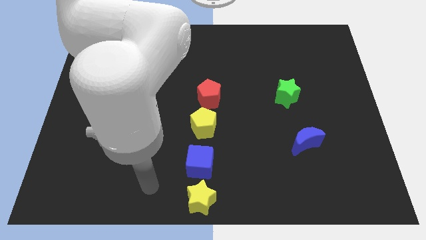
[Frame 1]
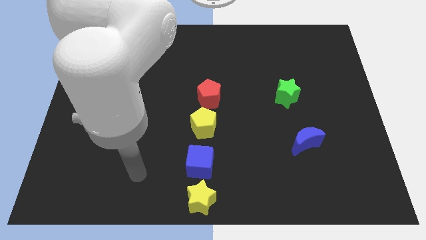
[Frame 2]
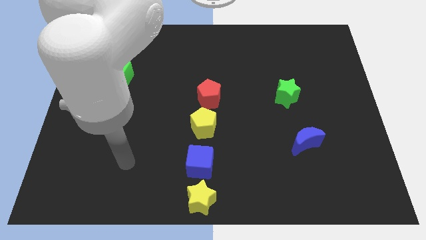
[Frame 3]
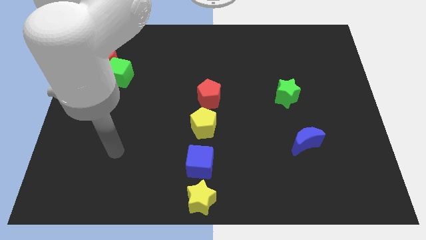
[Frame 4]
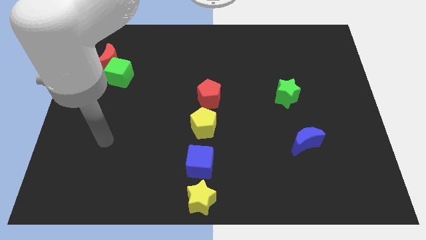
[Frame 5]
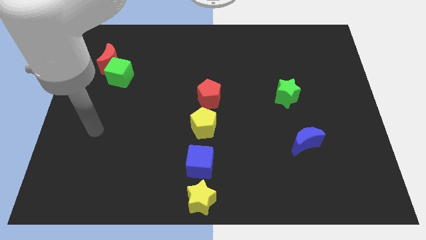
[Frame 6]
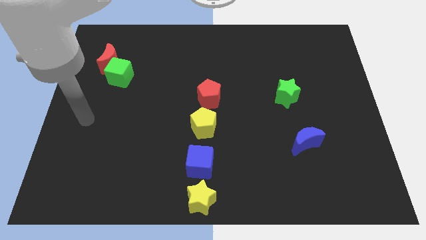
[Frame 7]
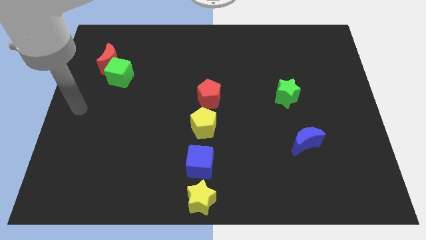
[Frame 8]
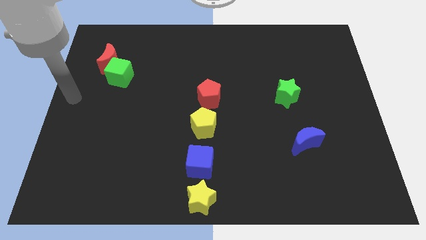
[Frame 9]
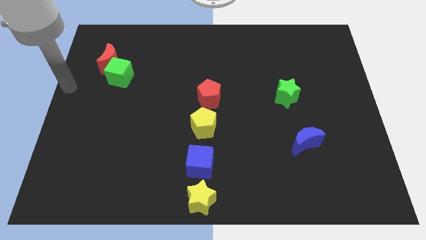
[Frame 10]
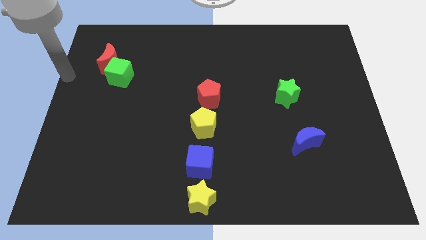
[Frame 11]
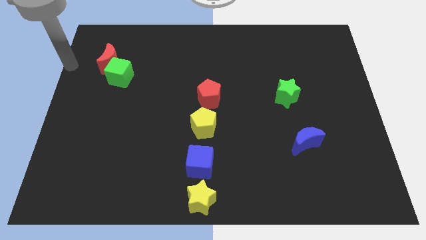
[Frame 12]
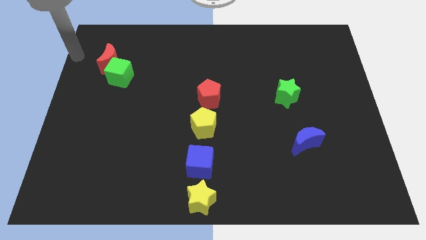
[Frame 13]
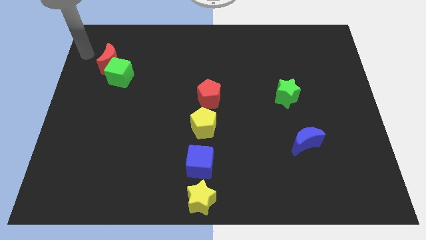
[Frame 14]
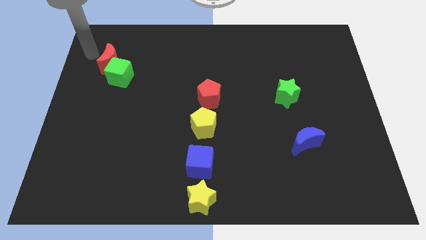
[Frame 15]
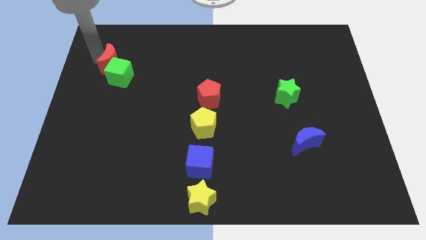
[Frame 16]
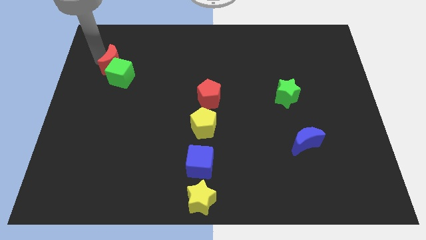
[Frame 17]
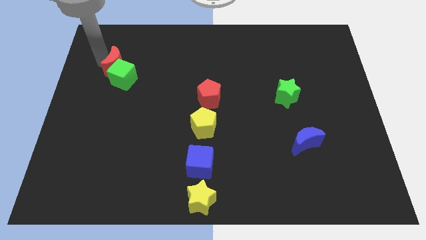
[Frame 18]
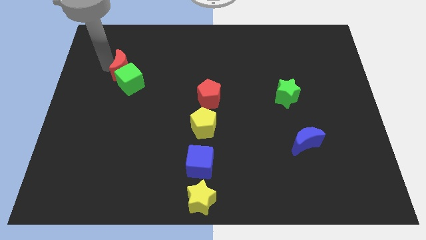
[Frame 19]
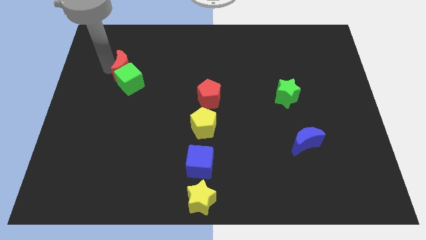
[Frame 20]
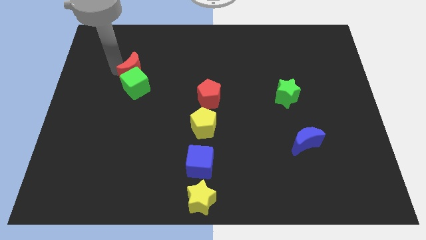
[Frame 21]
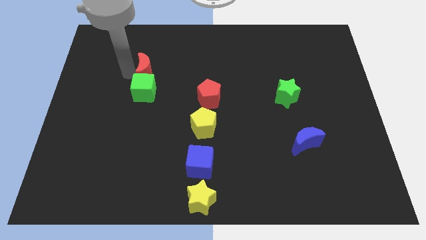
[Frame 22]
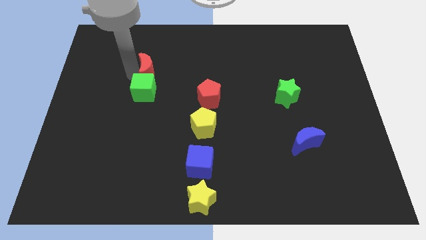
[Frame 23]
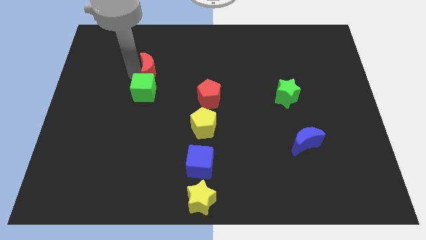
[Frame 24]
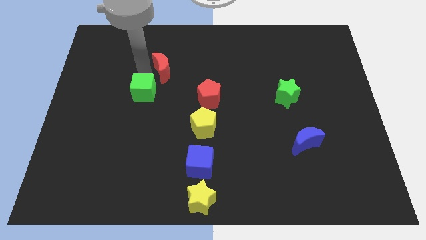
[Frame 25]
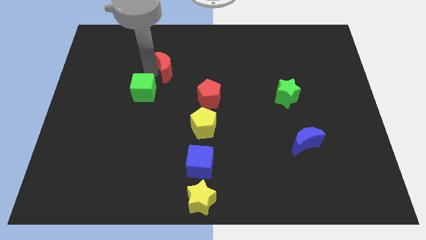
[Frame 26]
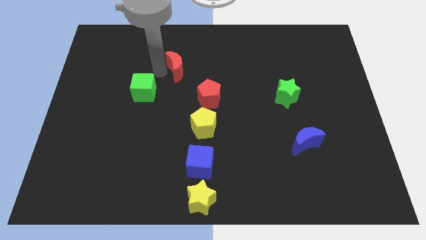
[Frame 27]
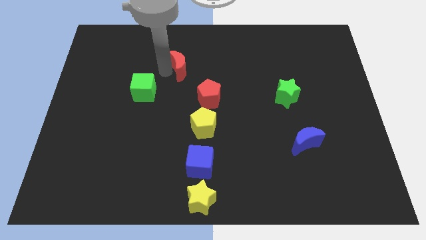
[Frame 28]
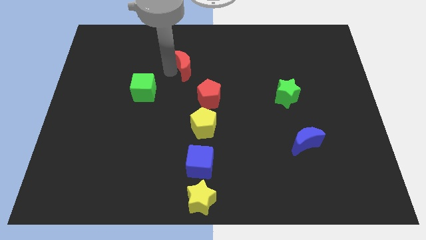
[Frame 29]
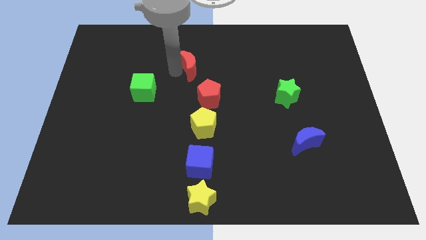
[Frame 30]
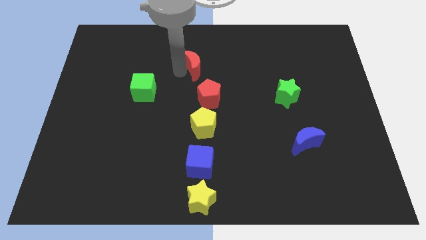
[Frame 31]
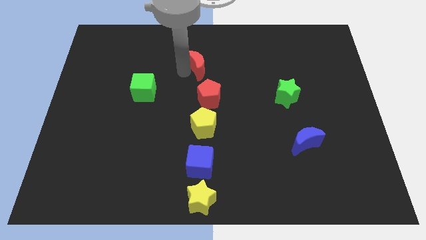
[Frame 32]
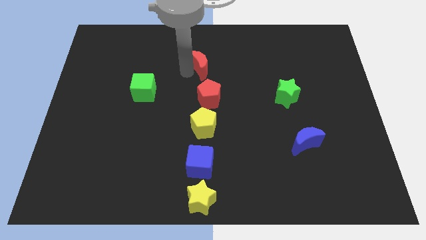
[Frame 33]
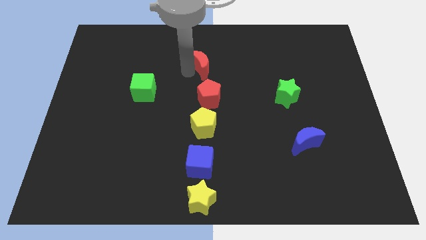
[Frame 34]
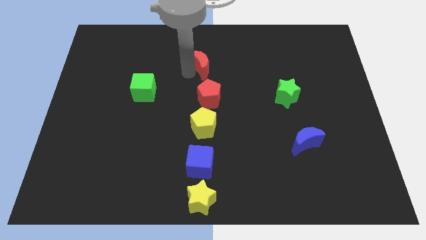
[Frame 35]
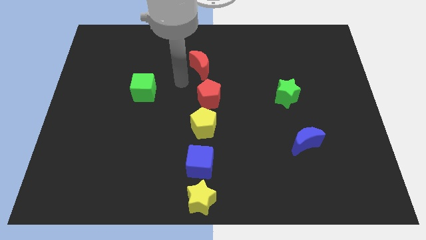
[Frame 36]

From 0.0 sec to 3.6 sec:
separate red moon and the green cube

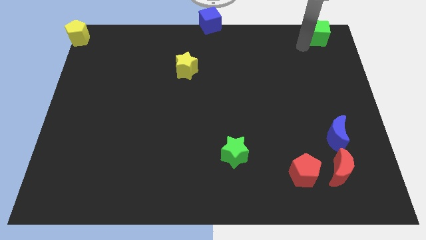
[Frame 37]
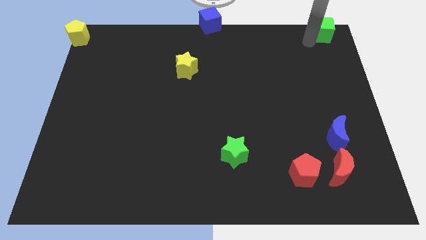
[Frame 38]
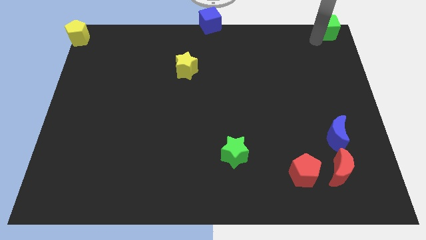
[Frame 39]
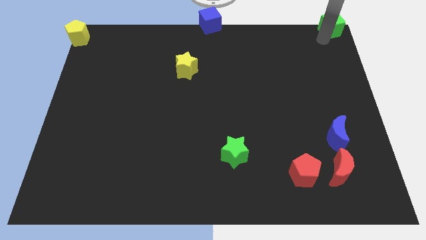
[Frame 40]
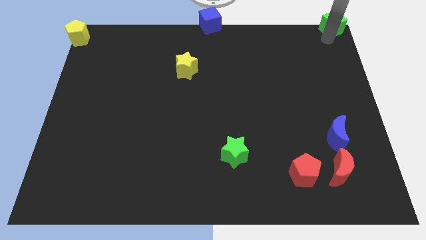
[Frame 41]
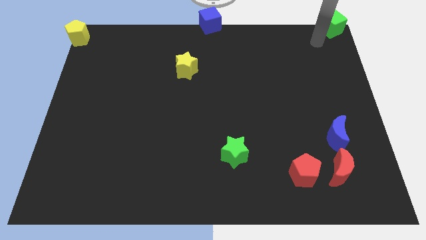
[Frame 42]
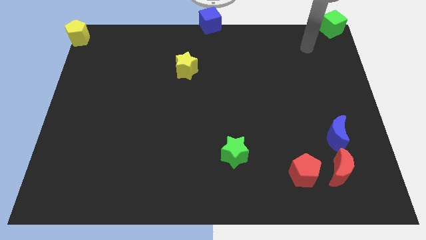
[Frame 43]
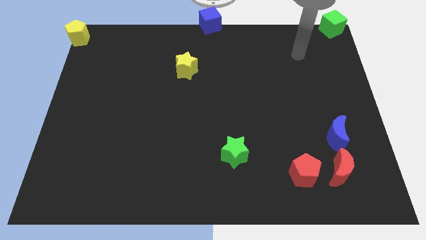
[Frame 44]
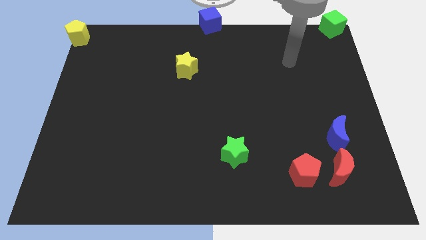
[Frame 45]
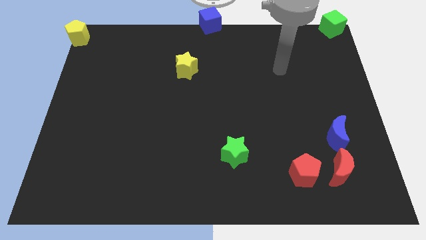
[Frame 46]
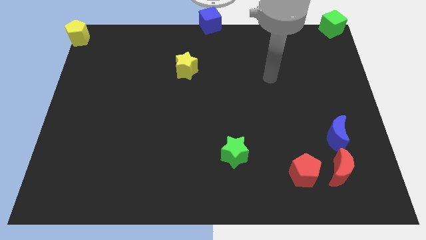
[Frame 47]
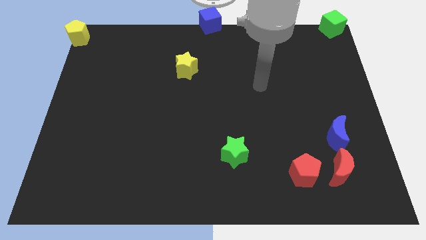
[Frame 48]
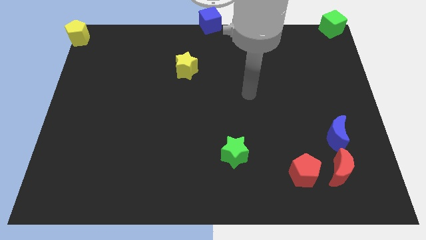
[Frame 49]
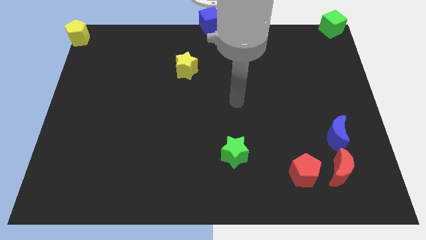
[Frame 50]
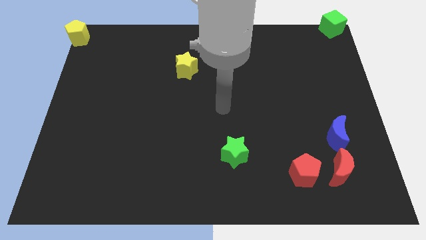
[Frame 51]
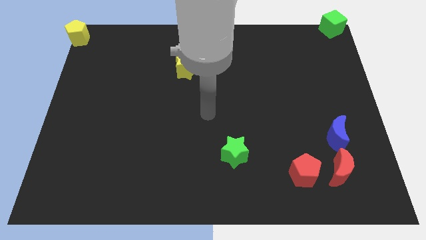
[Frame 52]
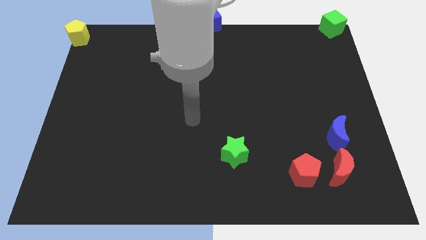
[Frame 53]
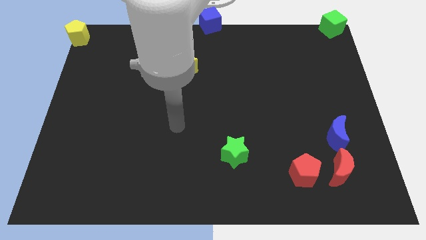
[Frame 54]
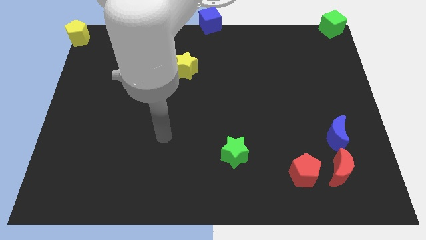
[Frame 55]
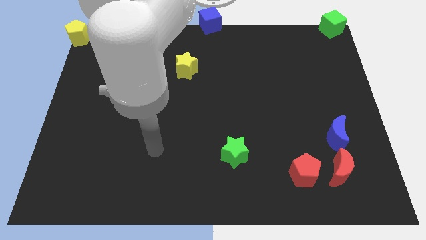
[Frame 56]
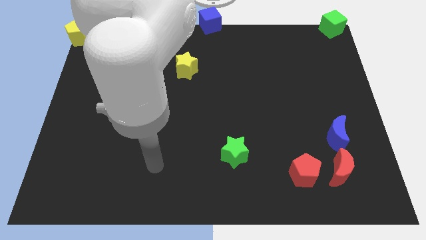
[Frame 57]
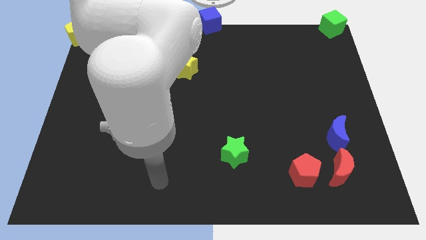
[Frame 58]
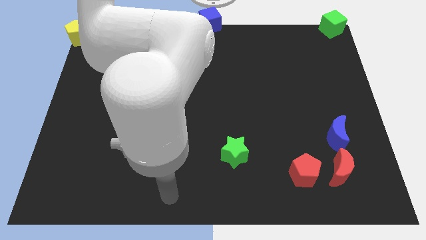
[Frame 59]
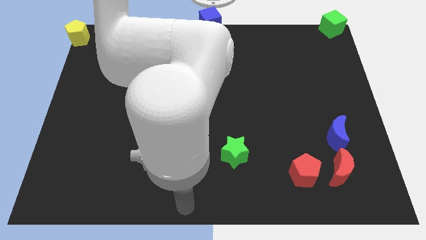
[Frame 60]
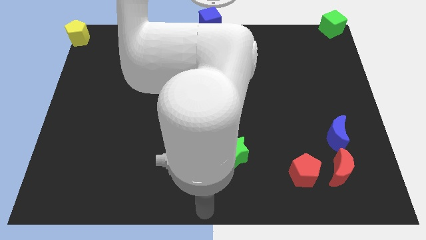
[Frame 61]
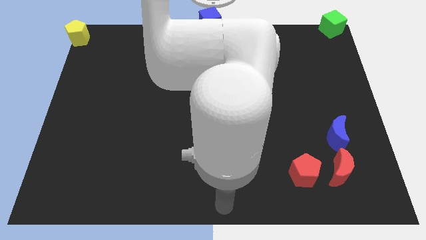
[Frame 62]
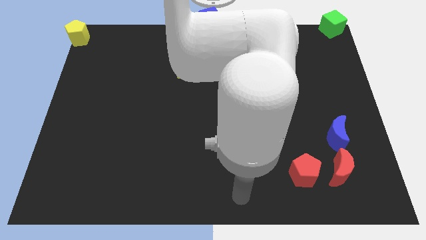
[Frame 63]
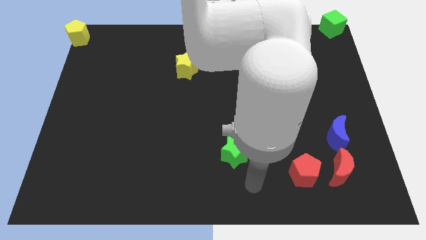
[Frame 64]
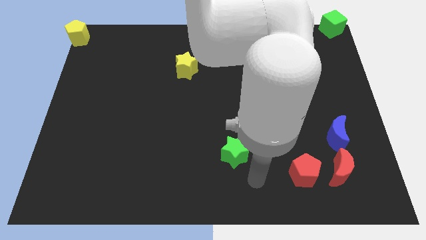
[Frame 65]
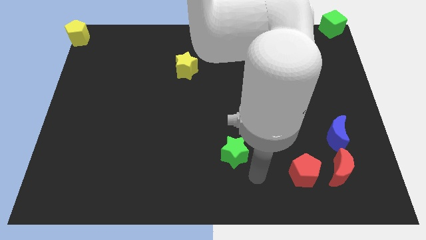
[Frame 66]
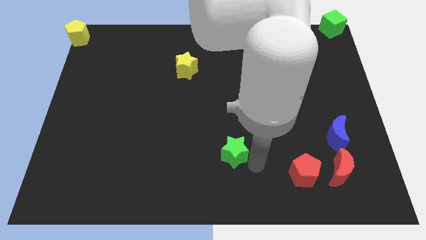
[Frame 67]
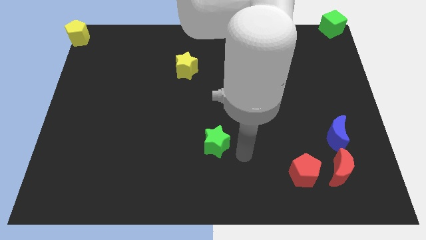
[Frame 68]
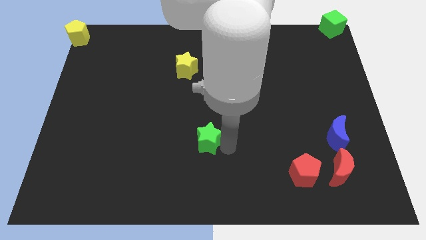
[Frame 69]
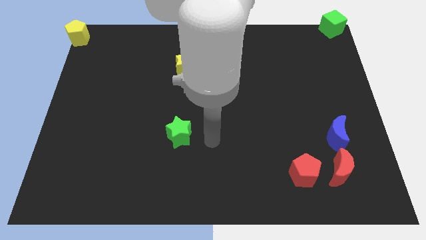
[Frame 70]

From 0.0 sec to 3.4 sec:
move the green star up slightly

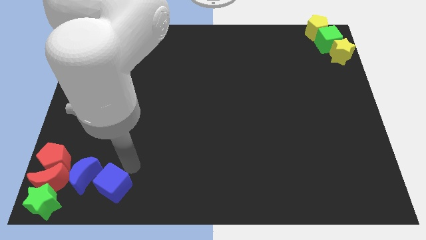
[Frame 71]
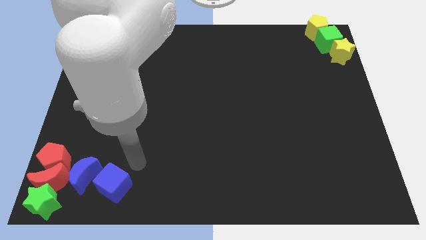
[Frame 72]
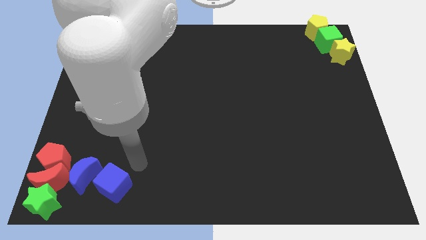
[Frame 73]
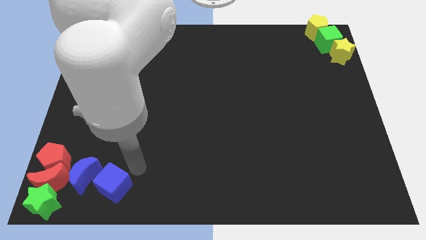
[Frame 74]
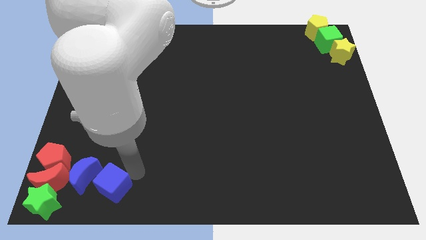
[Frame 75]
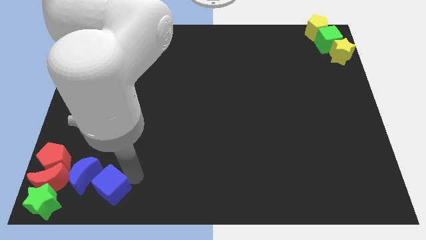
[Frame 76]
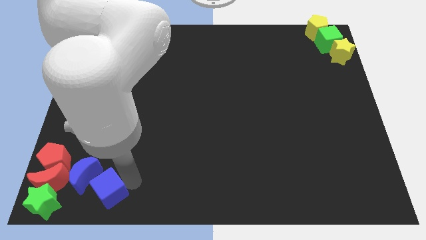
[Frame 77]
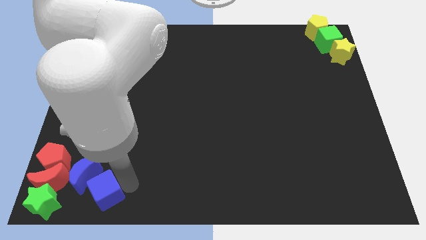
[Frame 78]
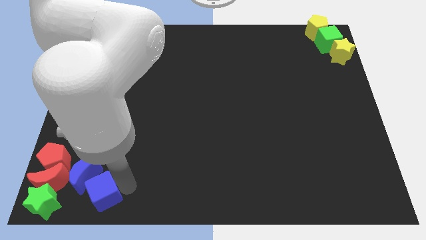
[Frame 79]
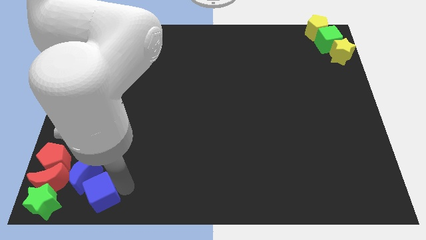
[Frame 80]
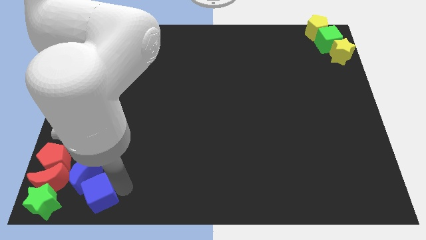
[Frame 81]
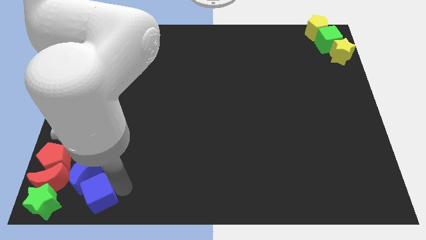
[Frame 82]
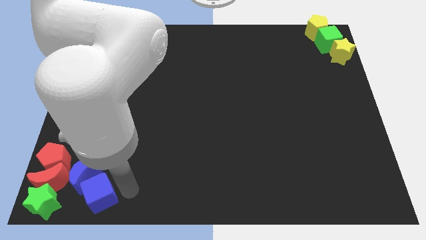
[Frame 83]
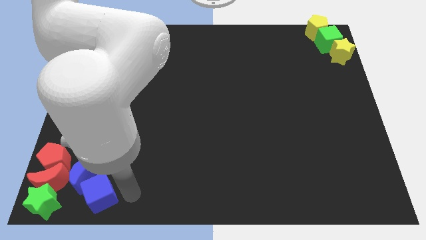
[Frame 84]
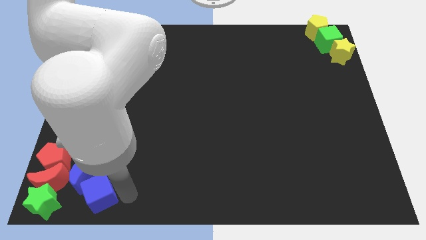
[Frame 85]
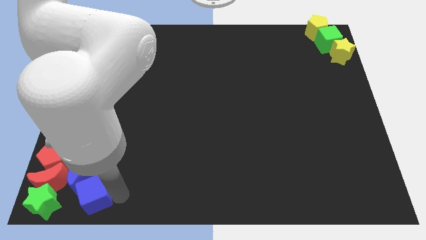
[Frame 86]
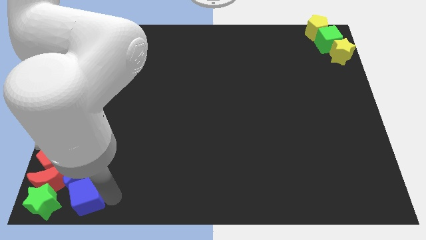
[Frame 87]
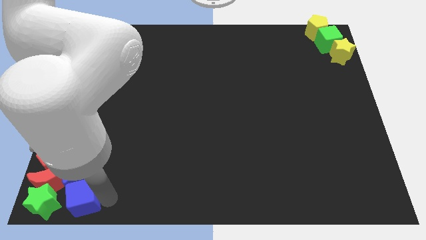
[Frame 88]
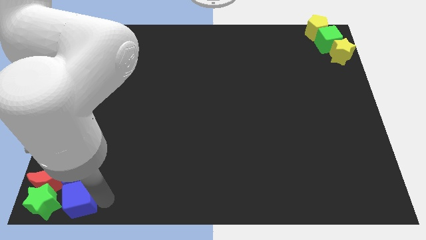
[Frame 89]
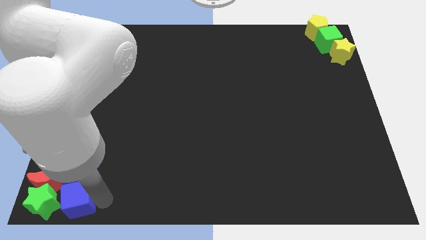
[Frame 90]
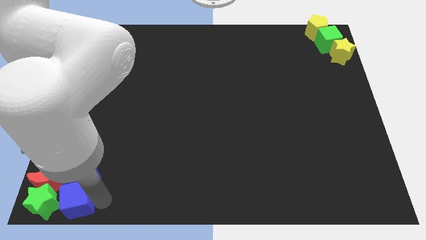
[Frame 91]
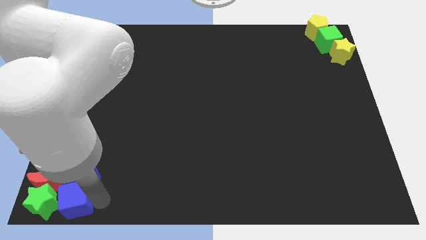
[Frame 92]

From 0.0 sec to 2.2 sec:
place the blue cube right to the green star
